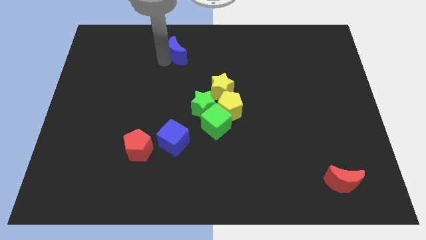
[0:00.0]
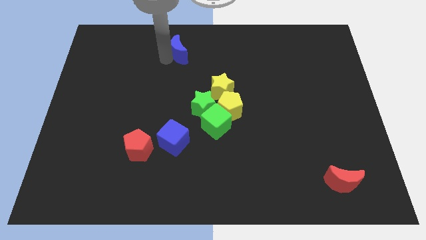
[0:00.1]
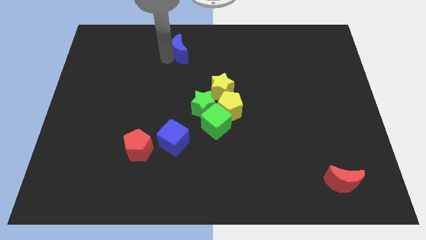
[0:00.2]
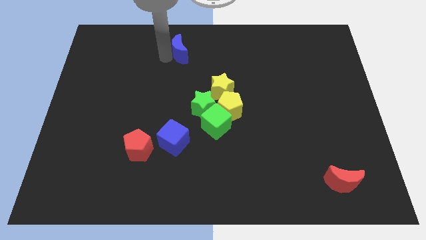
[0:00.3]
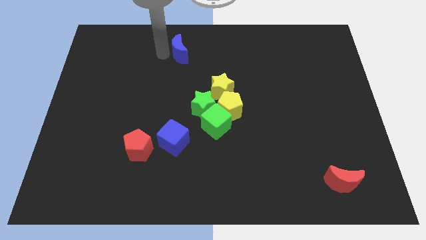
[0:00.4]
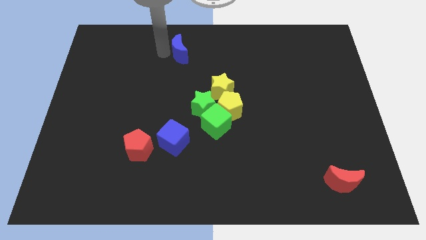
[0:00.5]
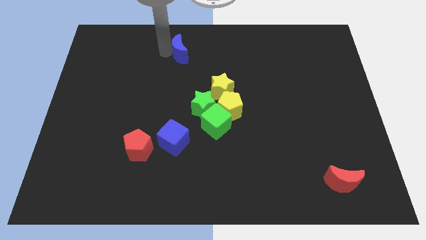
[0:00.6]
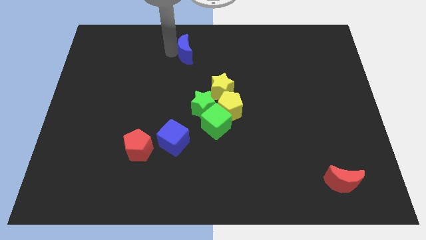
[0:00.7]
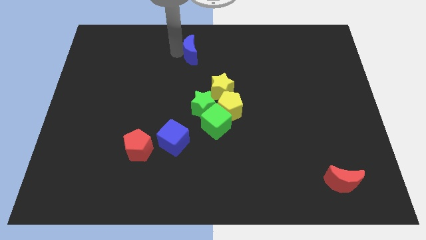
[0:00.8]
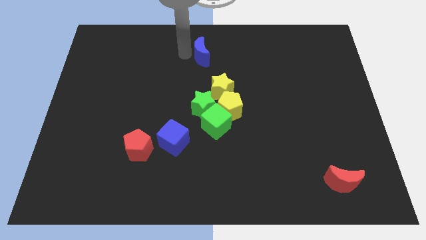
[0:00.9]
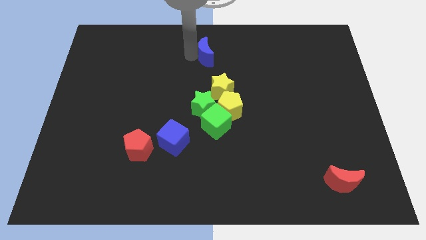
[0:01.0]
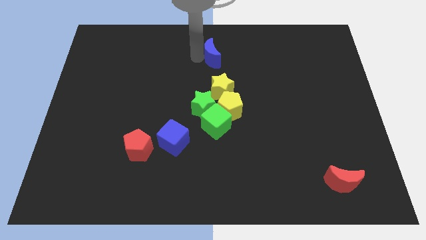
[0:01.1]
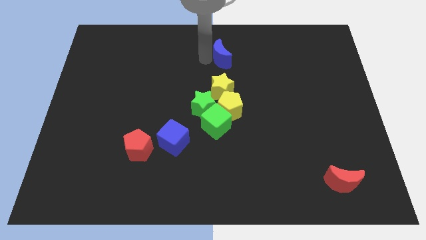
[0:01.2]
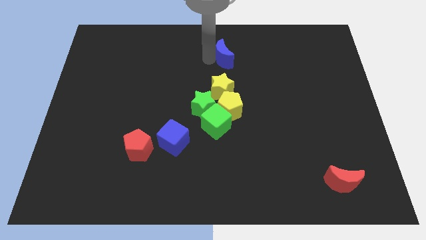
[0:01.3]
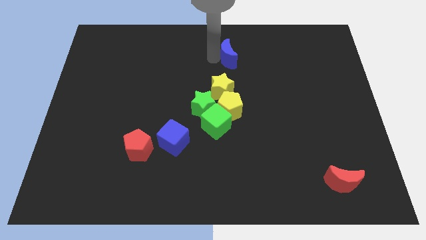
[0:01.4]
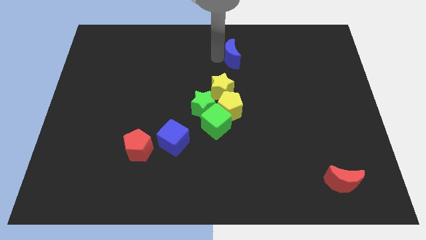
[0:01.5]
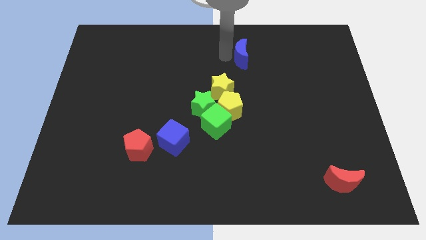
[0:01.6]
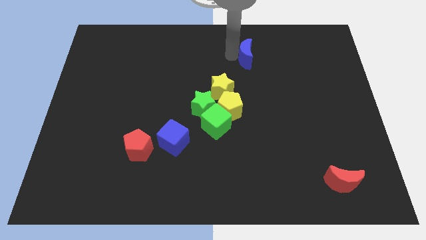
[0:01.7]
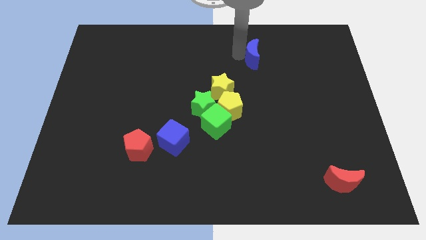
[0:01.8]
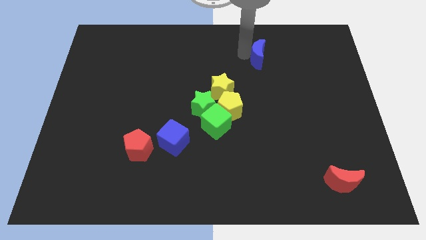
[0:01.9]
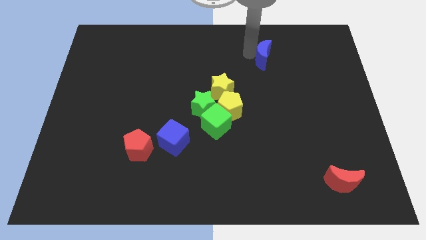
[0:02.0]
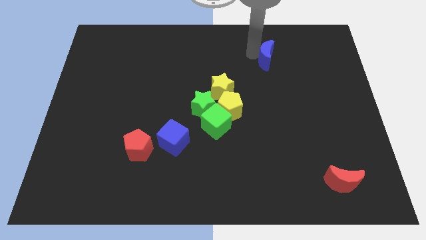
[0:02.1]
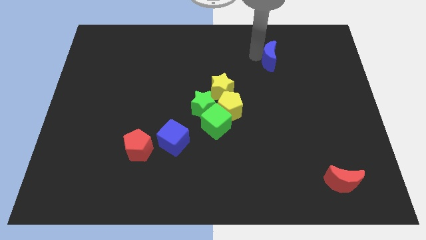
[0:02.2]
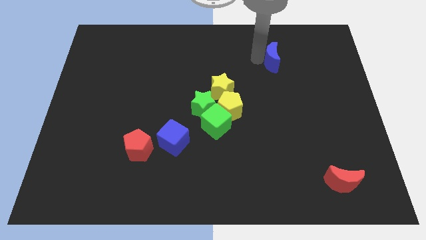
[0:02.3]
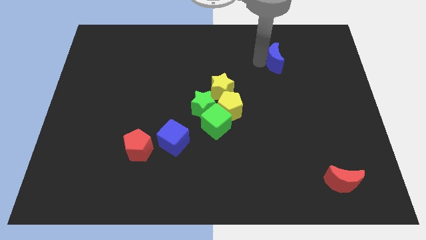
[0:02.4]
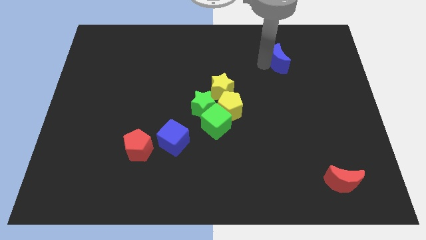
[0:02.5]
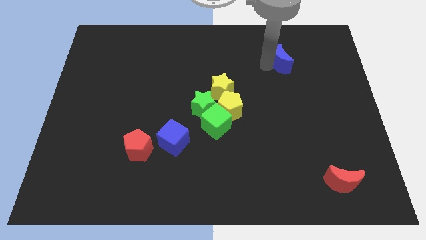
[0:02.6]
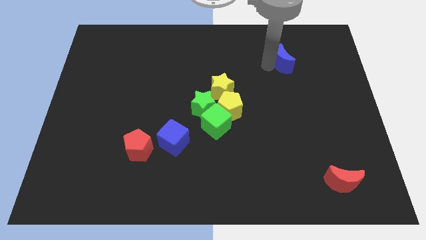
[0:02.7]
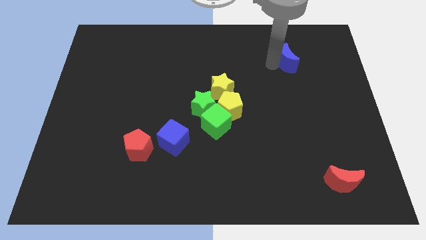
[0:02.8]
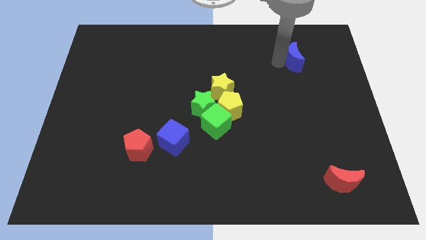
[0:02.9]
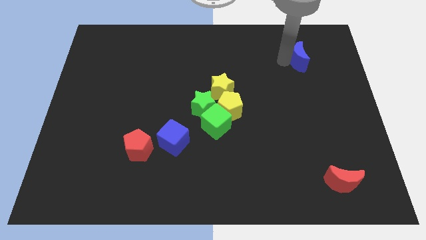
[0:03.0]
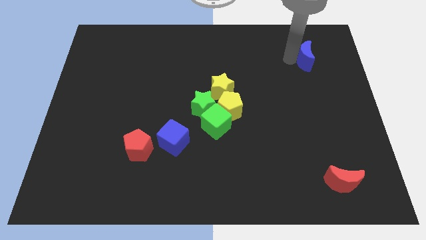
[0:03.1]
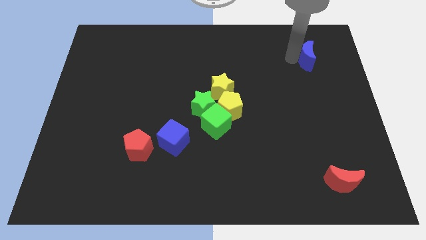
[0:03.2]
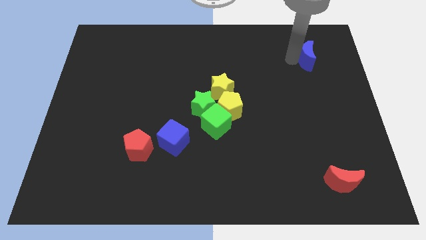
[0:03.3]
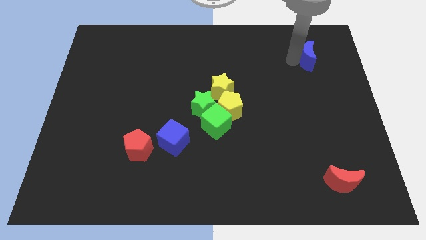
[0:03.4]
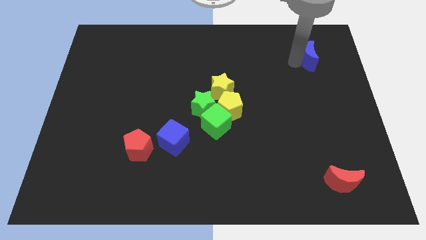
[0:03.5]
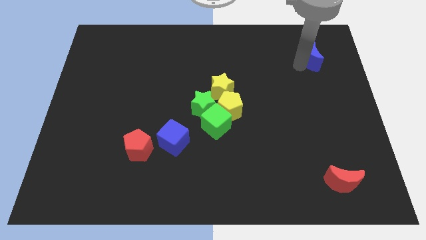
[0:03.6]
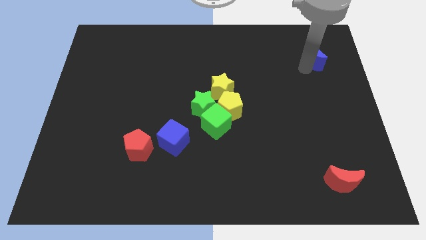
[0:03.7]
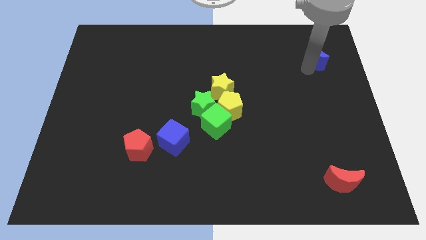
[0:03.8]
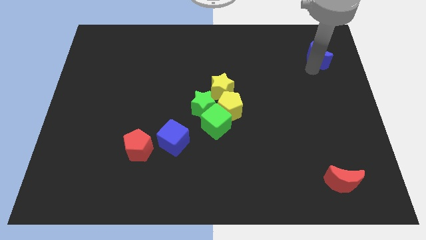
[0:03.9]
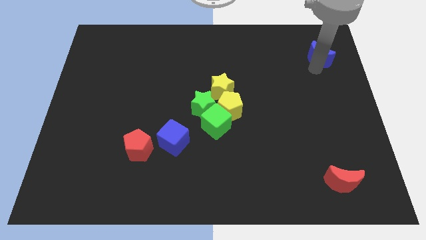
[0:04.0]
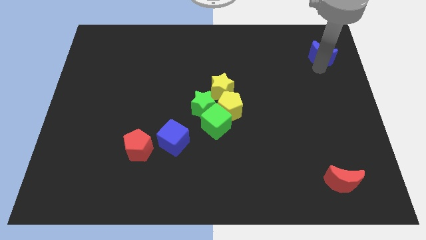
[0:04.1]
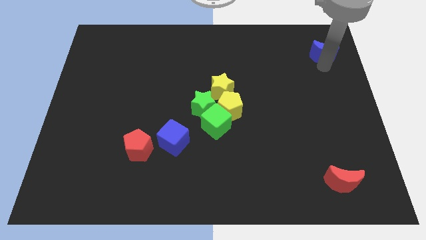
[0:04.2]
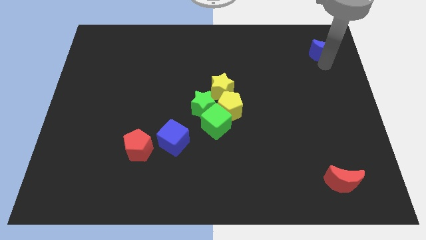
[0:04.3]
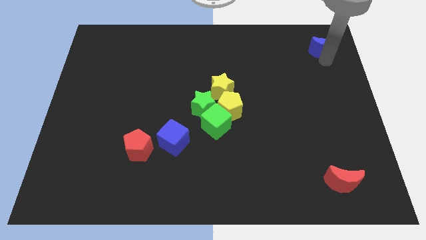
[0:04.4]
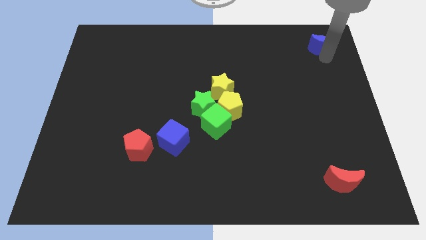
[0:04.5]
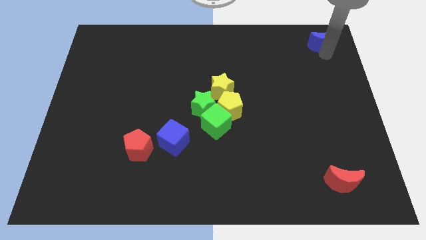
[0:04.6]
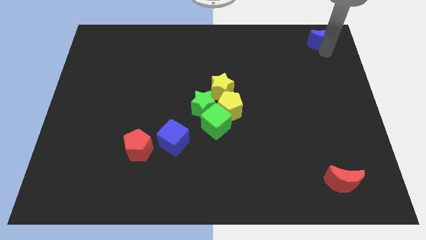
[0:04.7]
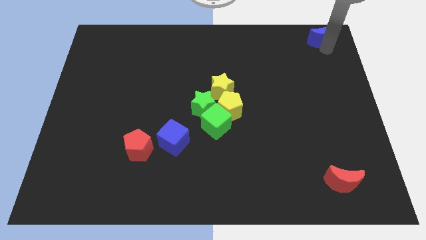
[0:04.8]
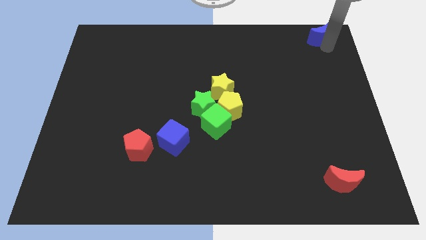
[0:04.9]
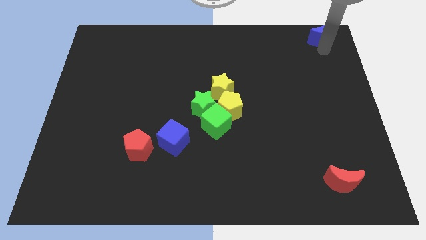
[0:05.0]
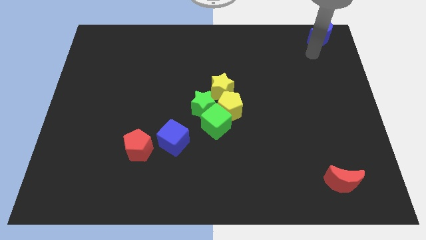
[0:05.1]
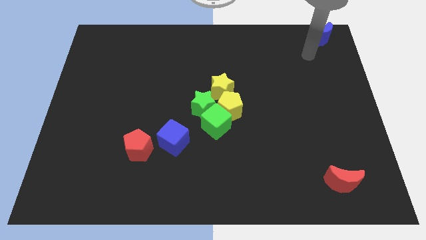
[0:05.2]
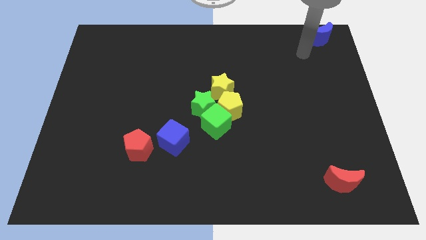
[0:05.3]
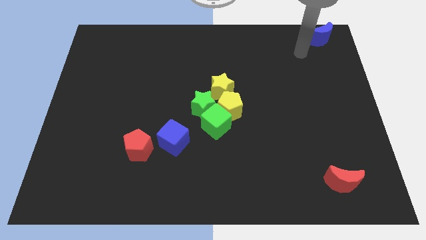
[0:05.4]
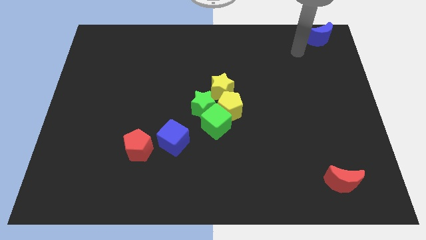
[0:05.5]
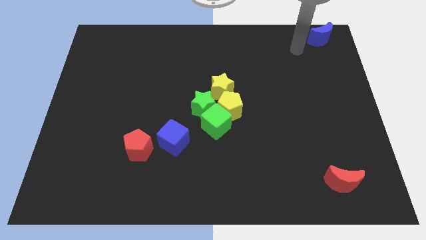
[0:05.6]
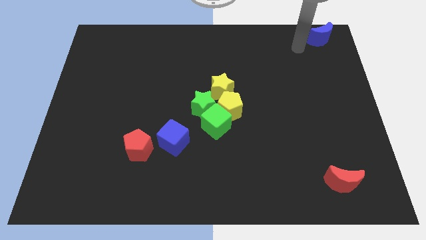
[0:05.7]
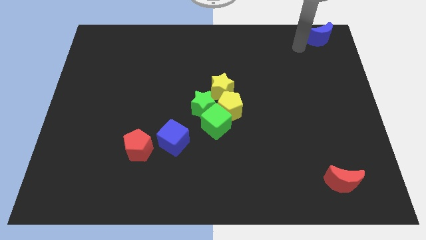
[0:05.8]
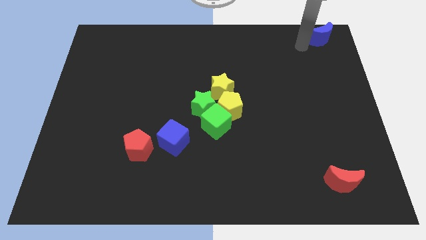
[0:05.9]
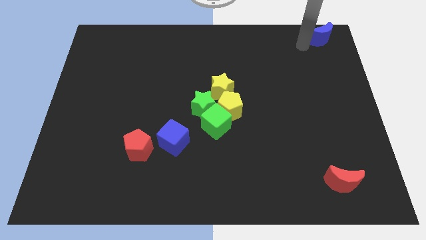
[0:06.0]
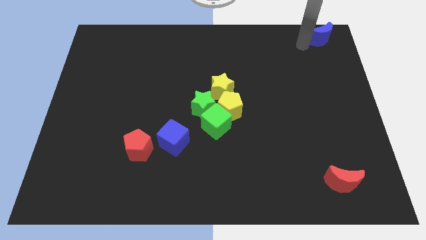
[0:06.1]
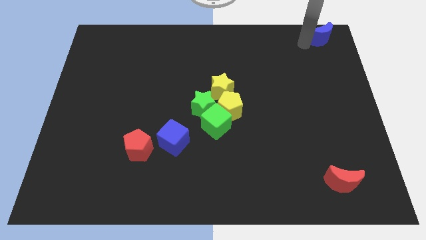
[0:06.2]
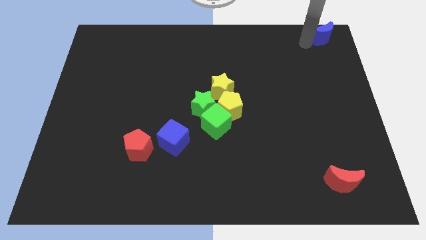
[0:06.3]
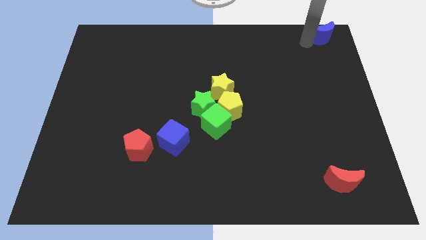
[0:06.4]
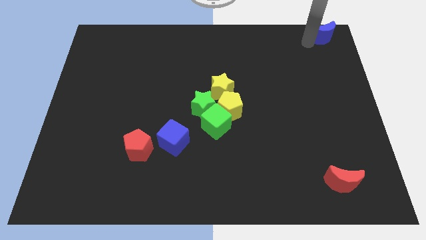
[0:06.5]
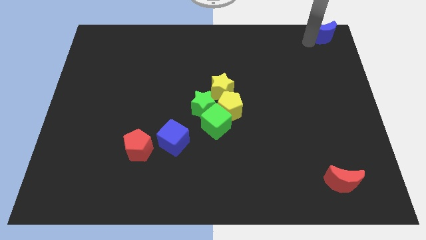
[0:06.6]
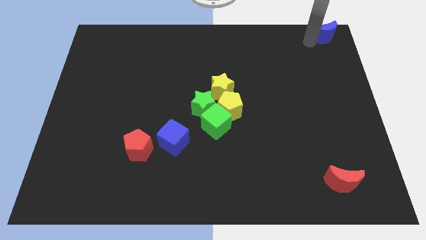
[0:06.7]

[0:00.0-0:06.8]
place the blue crescent diagonally to yellow blocks

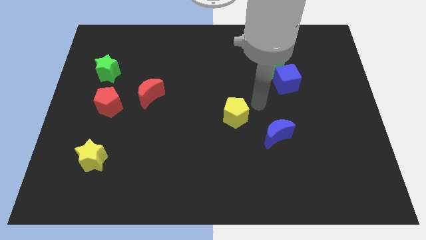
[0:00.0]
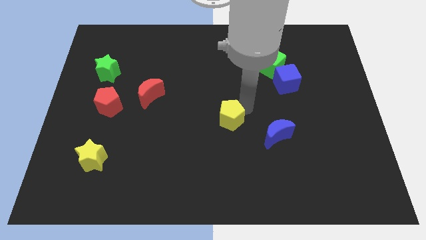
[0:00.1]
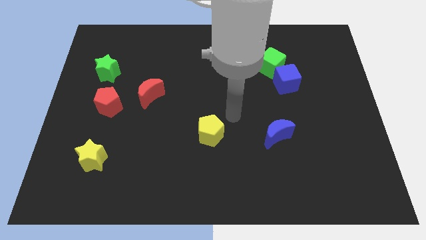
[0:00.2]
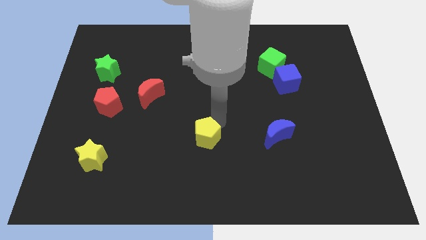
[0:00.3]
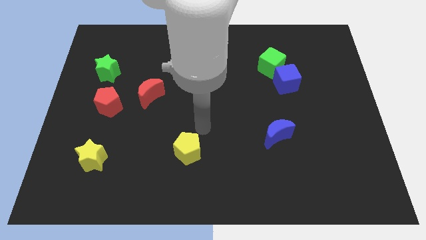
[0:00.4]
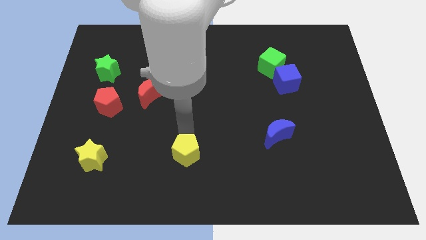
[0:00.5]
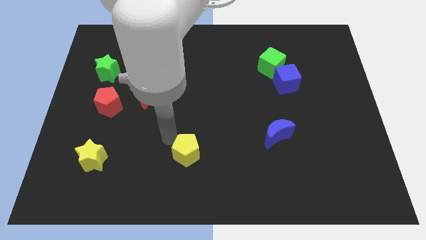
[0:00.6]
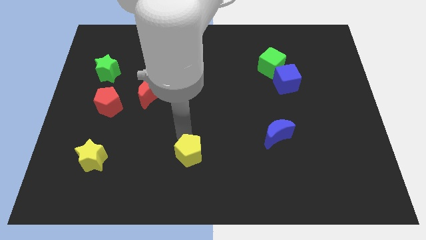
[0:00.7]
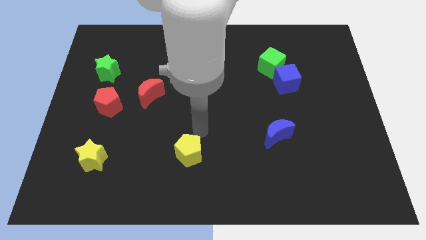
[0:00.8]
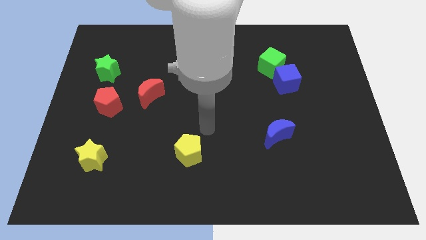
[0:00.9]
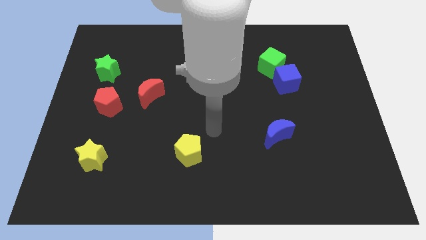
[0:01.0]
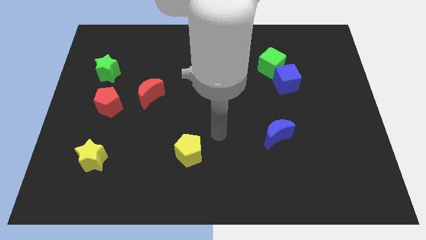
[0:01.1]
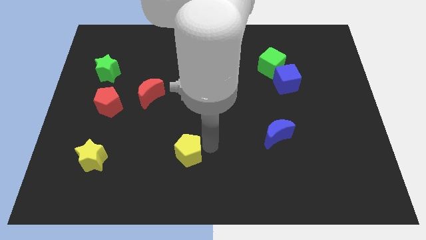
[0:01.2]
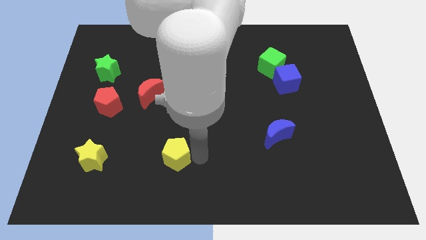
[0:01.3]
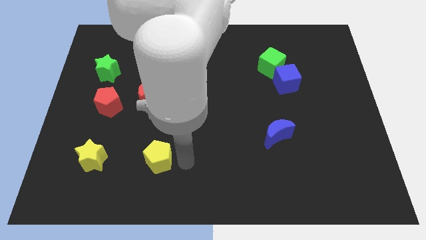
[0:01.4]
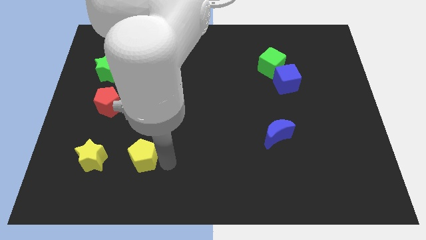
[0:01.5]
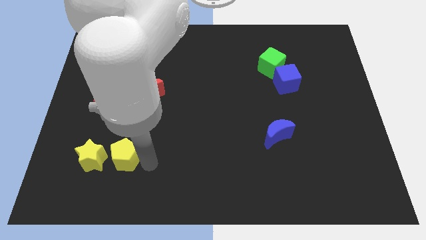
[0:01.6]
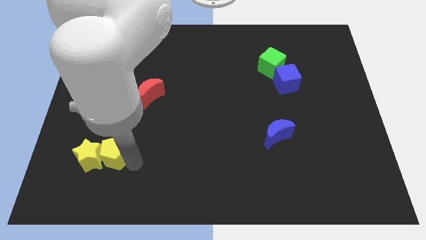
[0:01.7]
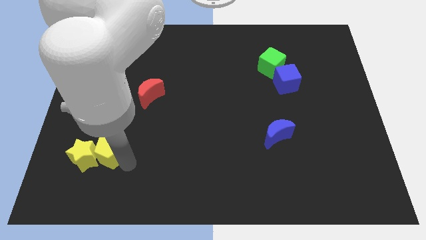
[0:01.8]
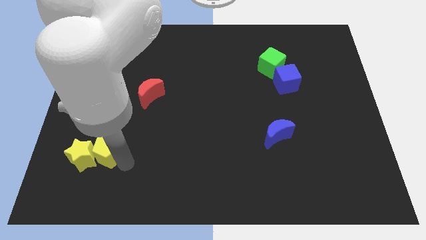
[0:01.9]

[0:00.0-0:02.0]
push the yellow pentagon into the yellow star

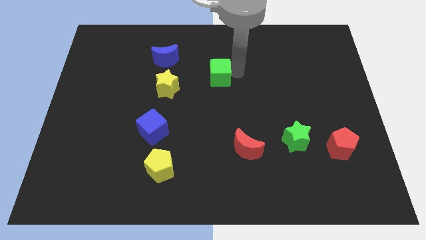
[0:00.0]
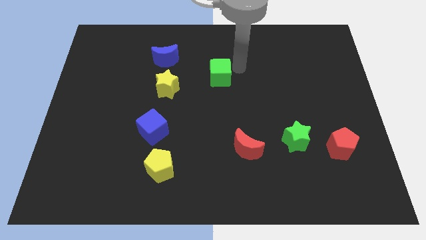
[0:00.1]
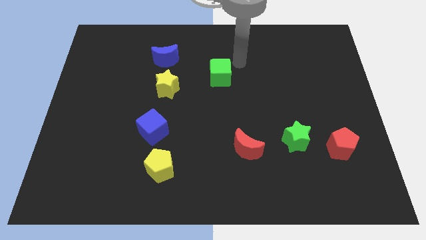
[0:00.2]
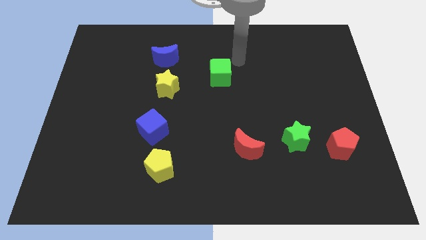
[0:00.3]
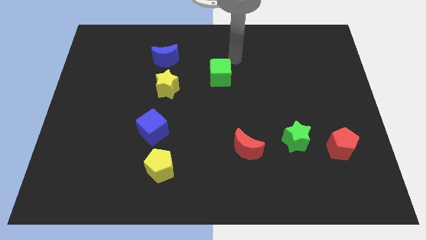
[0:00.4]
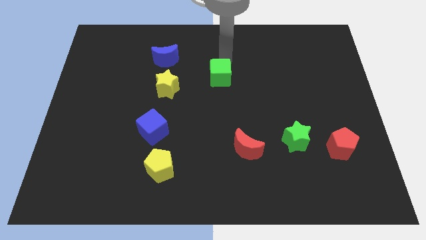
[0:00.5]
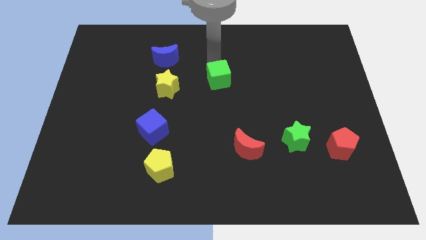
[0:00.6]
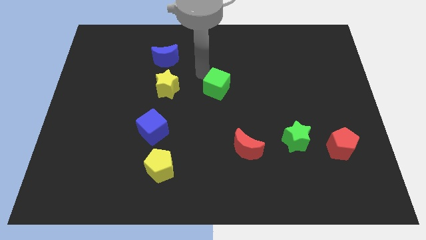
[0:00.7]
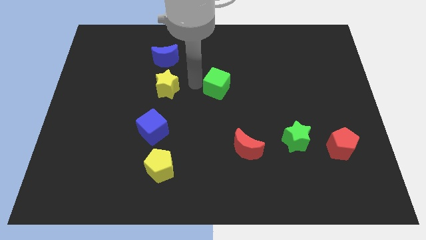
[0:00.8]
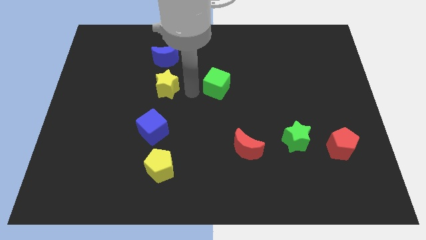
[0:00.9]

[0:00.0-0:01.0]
push the green cube down slightly
